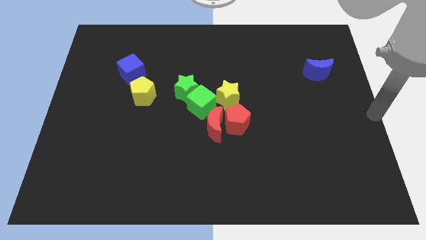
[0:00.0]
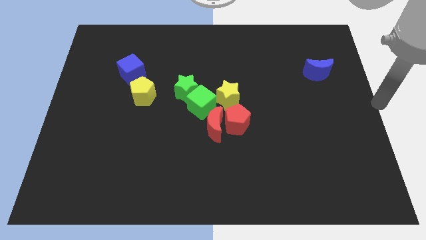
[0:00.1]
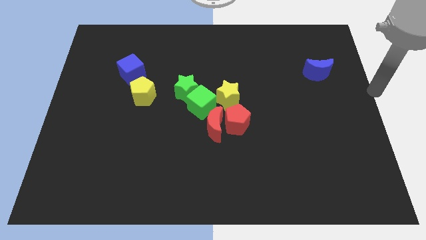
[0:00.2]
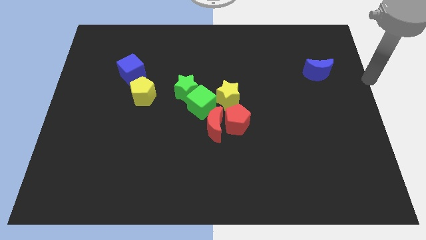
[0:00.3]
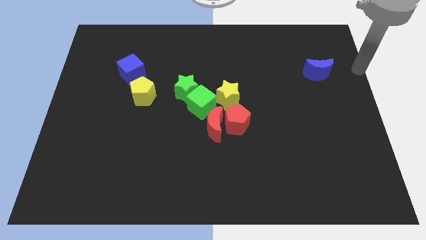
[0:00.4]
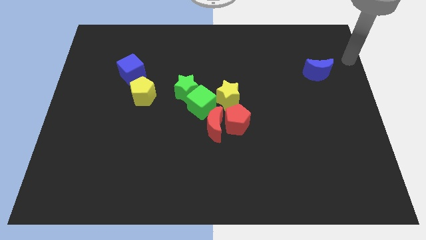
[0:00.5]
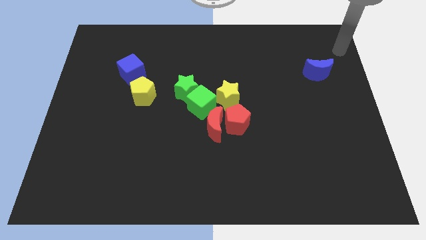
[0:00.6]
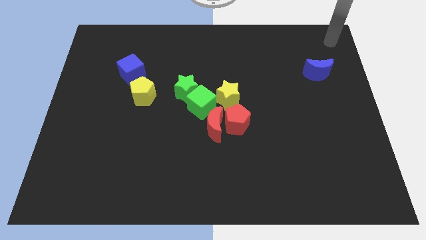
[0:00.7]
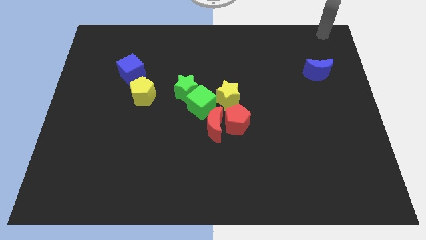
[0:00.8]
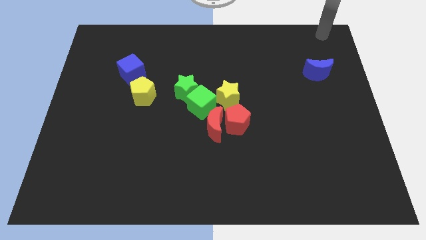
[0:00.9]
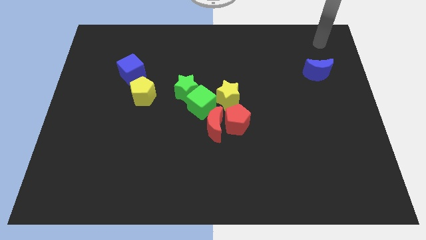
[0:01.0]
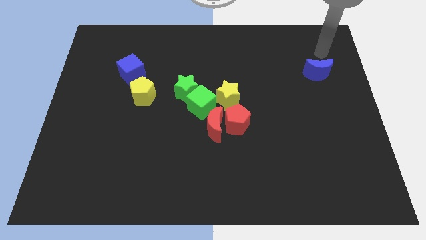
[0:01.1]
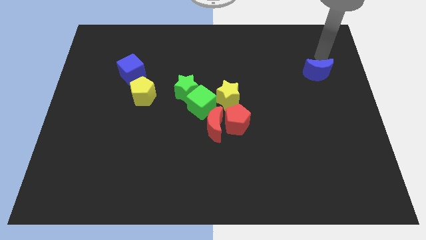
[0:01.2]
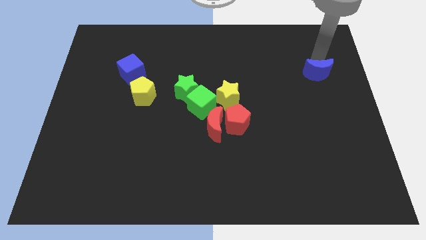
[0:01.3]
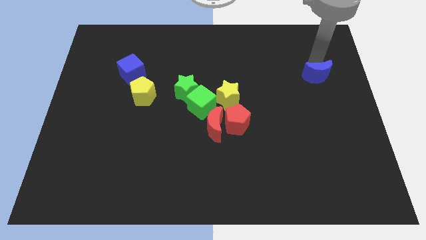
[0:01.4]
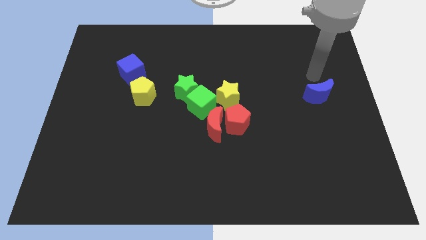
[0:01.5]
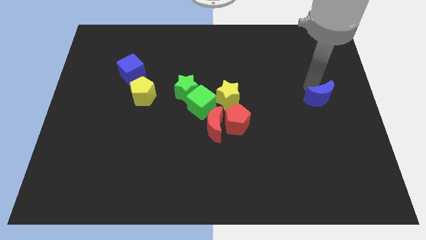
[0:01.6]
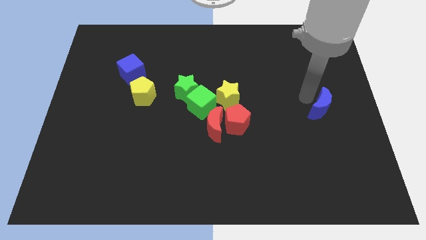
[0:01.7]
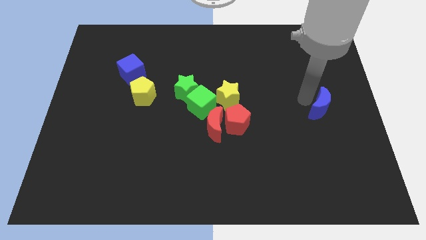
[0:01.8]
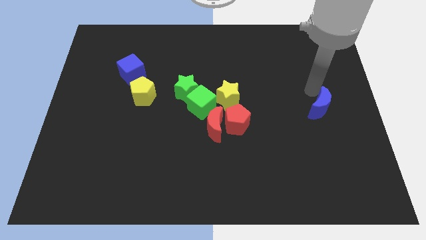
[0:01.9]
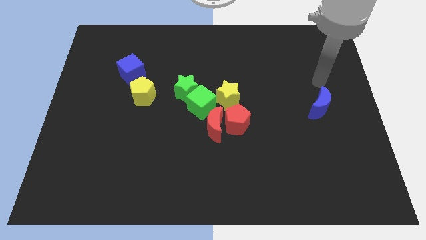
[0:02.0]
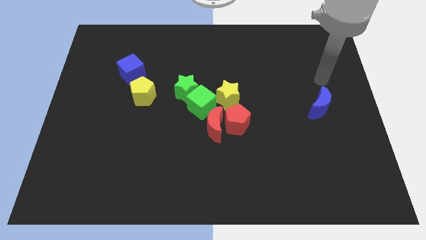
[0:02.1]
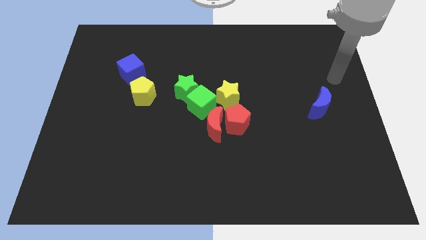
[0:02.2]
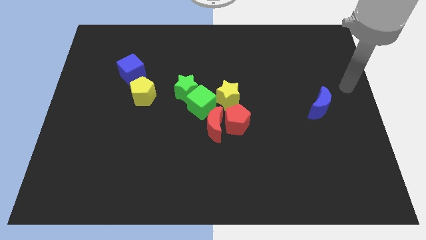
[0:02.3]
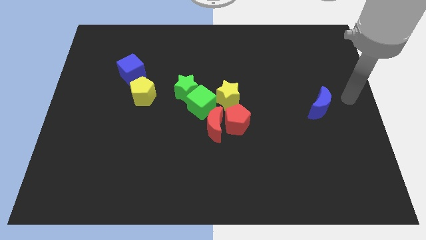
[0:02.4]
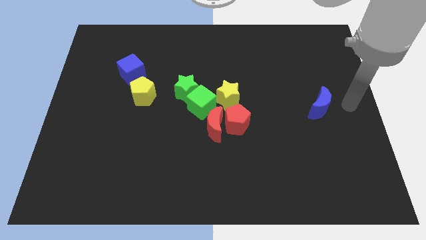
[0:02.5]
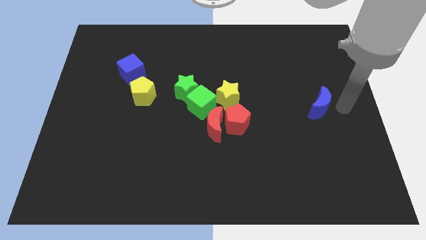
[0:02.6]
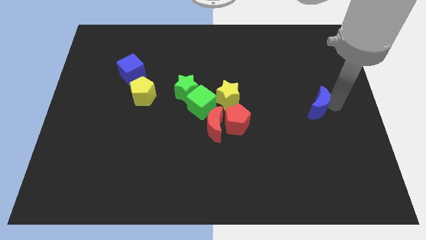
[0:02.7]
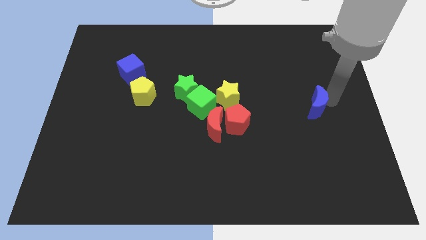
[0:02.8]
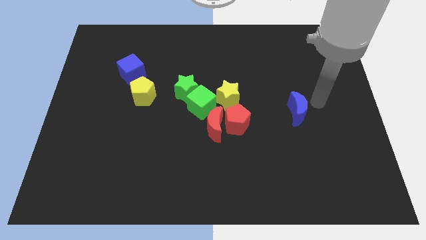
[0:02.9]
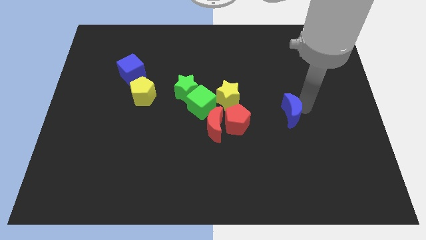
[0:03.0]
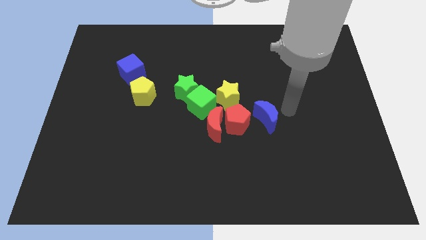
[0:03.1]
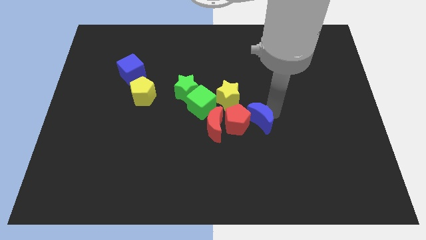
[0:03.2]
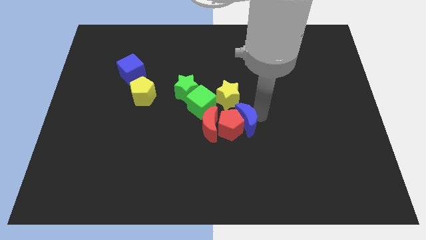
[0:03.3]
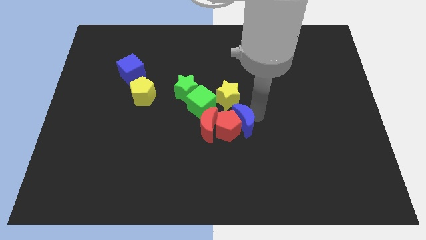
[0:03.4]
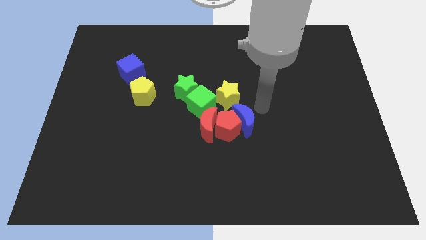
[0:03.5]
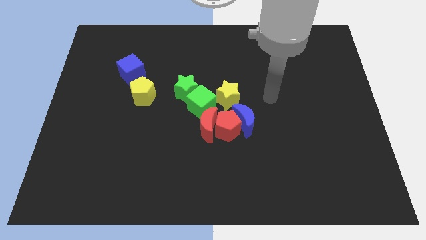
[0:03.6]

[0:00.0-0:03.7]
slide the blue moon towards the right side of the red pentagon

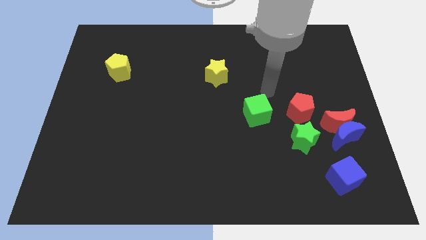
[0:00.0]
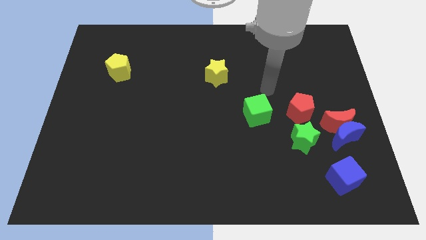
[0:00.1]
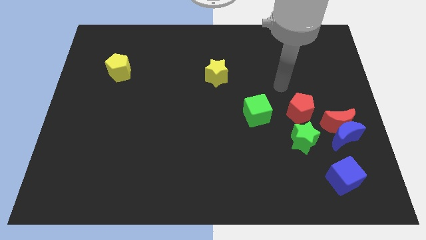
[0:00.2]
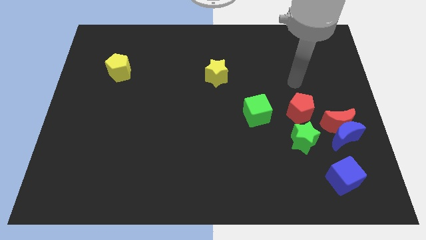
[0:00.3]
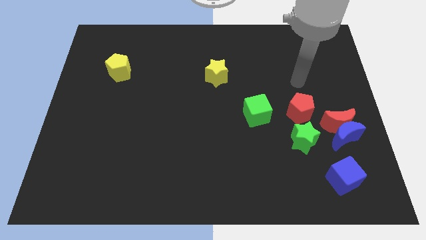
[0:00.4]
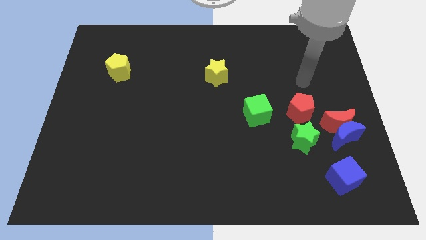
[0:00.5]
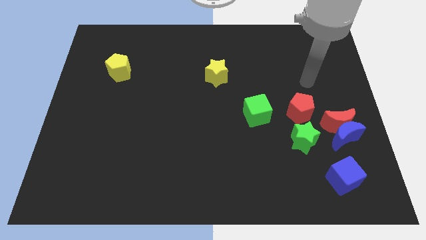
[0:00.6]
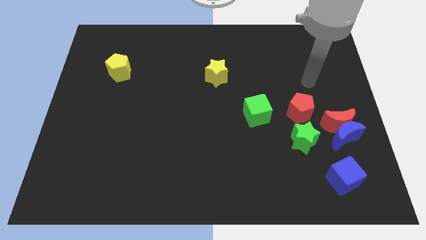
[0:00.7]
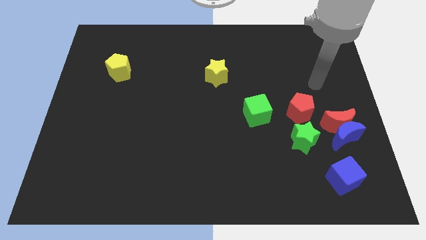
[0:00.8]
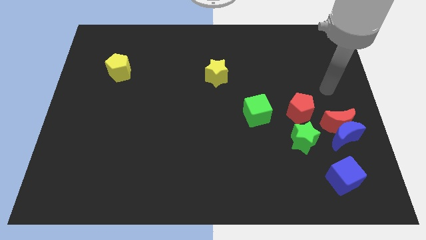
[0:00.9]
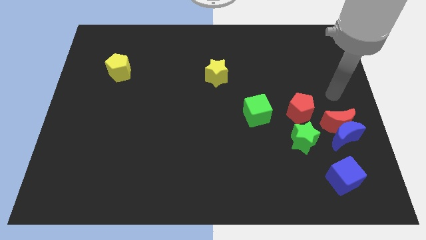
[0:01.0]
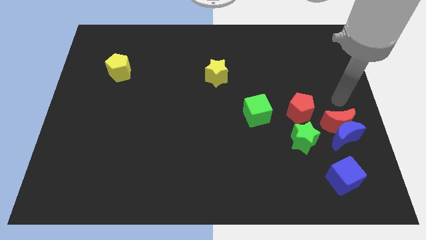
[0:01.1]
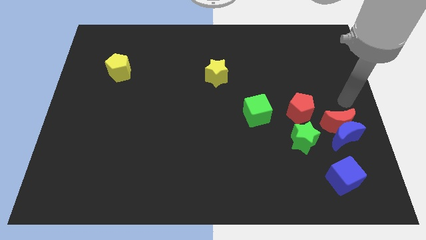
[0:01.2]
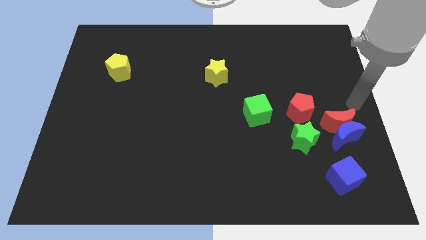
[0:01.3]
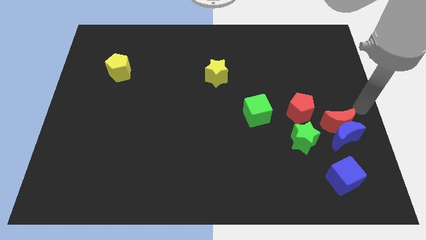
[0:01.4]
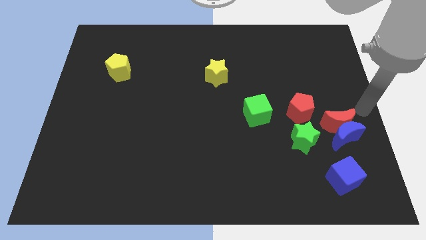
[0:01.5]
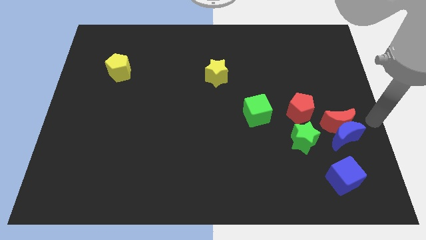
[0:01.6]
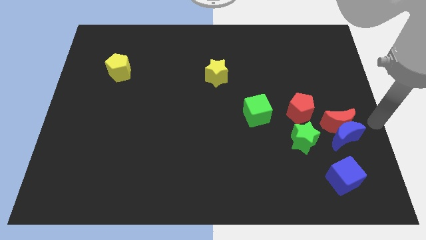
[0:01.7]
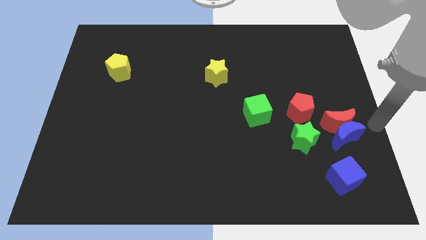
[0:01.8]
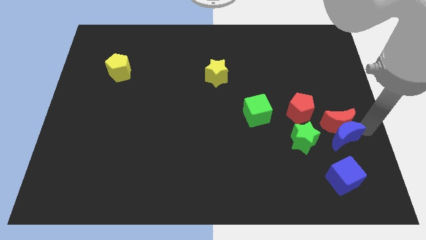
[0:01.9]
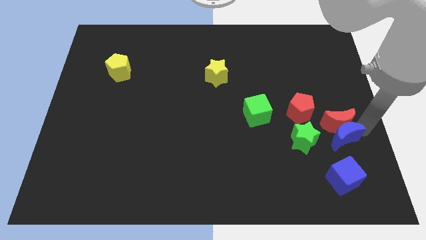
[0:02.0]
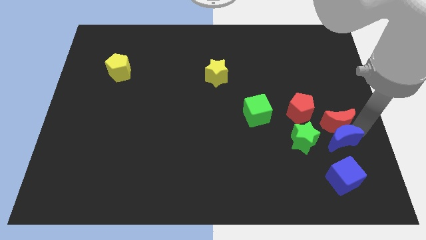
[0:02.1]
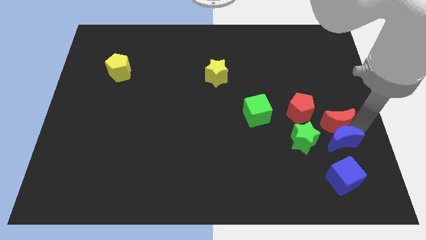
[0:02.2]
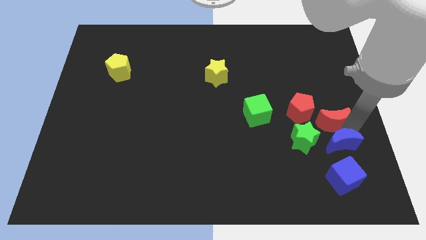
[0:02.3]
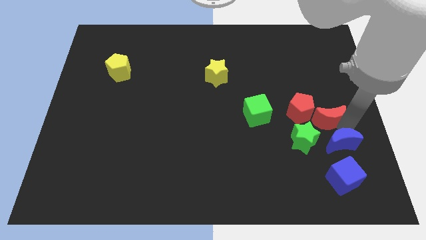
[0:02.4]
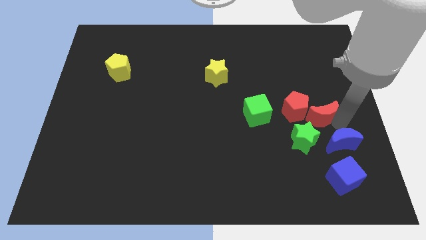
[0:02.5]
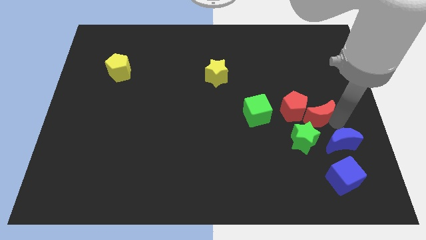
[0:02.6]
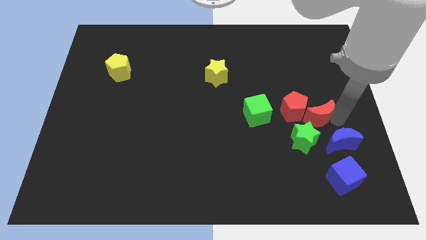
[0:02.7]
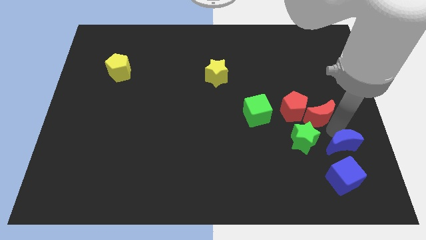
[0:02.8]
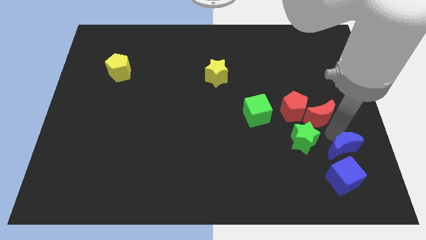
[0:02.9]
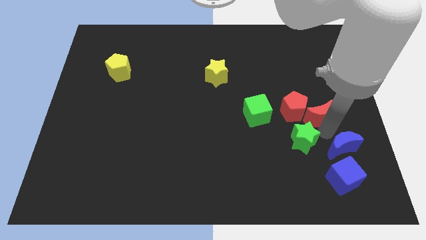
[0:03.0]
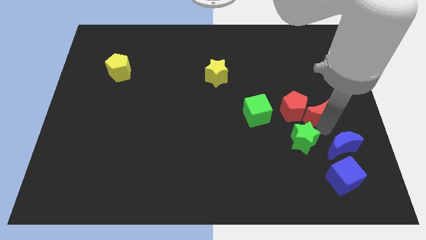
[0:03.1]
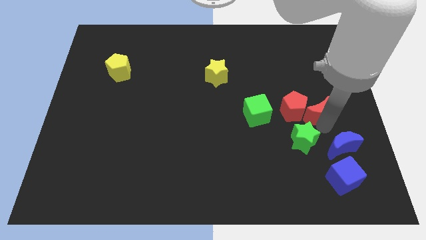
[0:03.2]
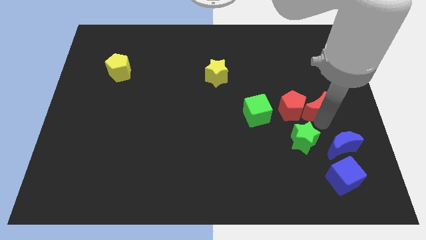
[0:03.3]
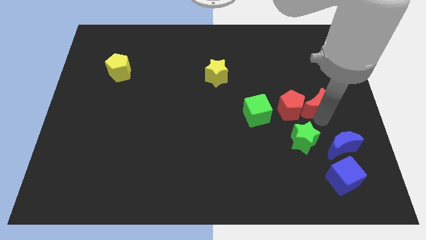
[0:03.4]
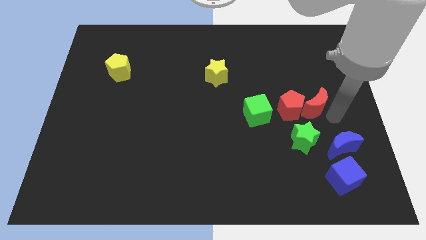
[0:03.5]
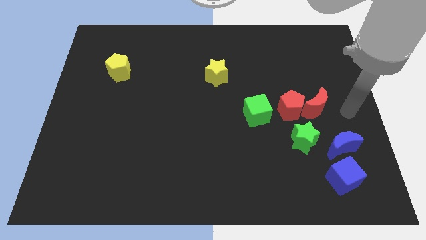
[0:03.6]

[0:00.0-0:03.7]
place the red moon right to the red pentagon

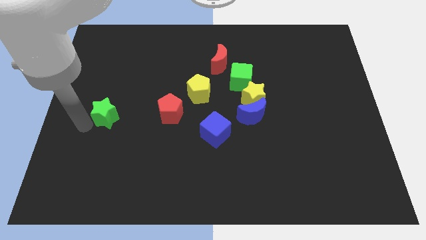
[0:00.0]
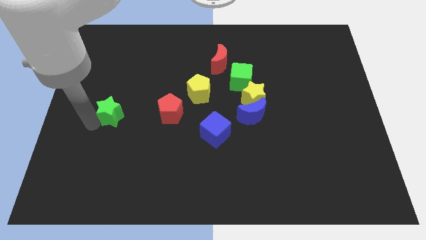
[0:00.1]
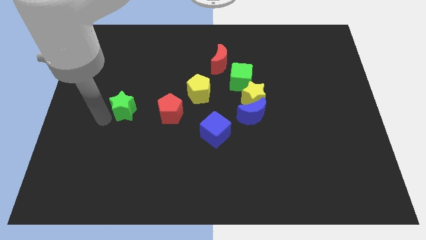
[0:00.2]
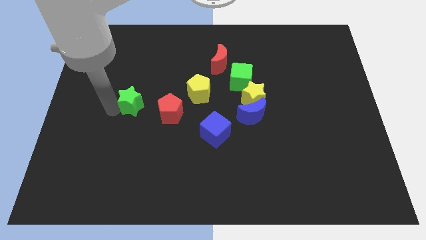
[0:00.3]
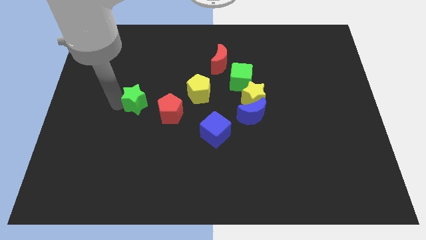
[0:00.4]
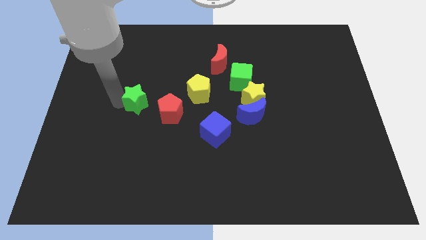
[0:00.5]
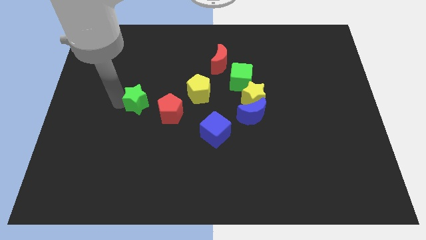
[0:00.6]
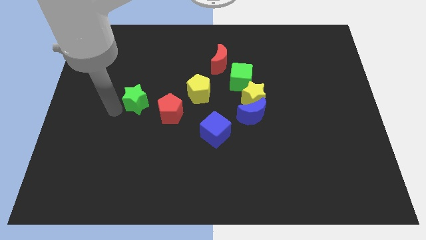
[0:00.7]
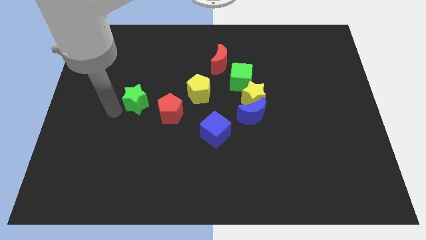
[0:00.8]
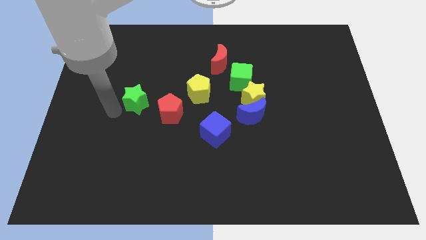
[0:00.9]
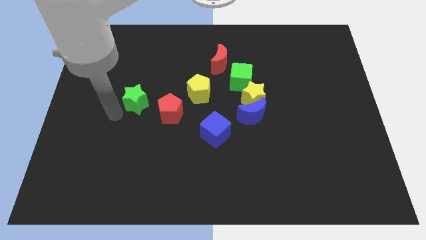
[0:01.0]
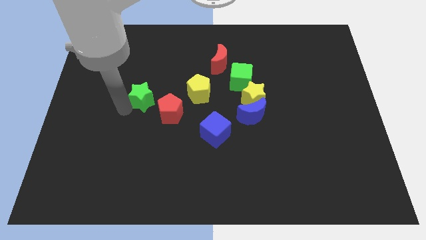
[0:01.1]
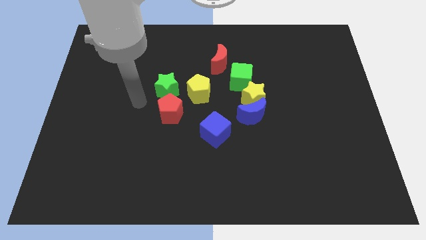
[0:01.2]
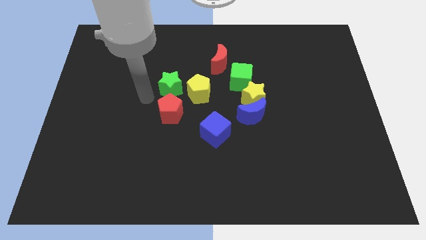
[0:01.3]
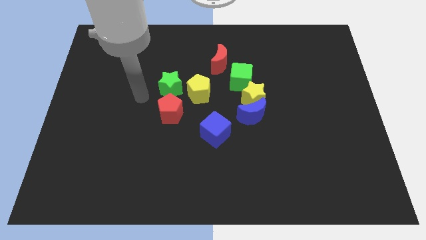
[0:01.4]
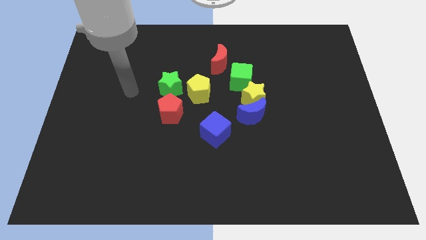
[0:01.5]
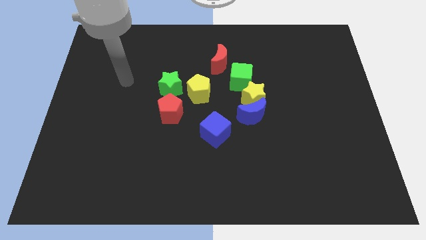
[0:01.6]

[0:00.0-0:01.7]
put the green star at the top side of the red pentagon

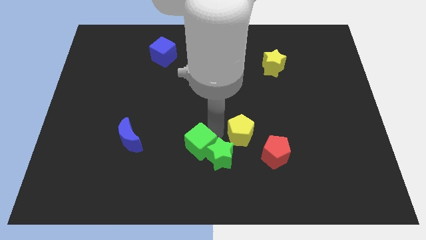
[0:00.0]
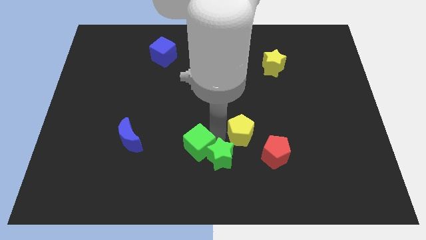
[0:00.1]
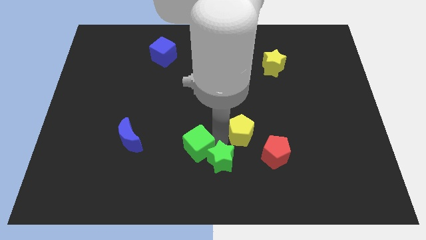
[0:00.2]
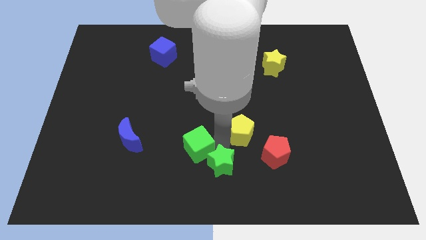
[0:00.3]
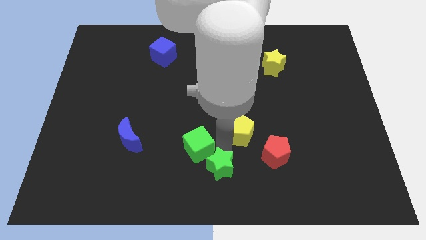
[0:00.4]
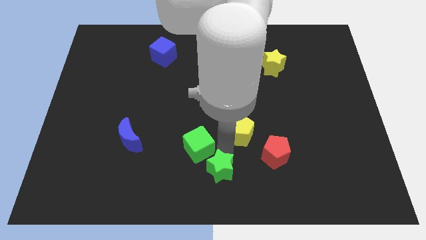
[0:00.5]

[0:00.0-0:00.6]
move the green star towards the bottom center
